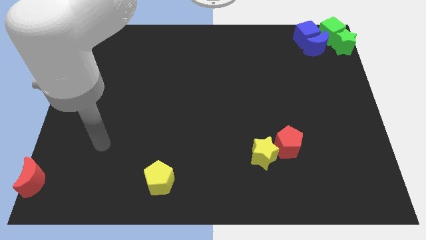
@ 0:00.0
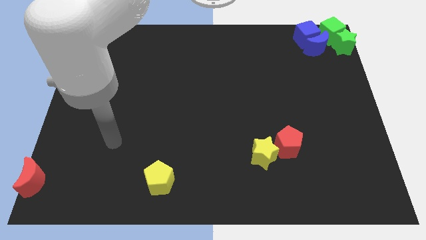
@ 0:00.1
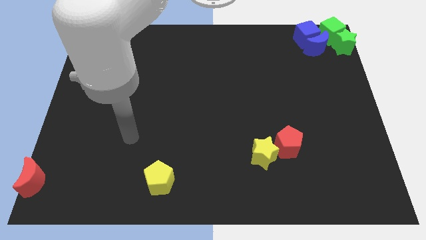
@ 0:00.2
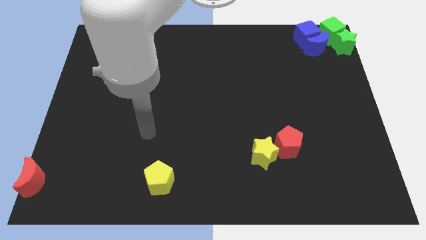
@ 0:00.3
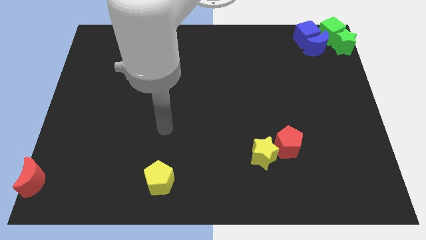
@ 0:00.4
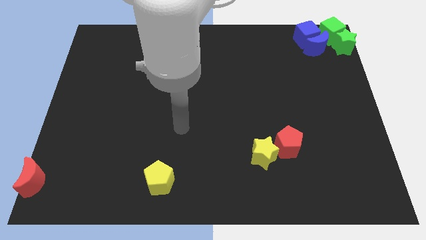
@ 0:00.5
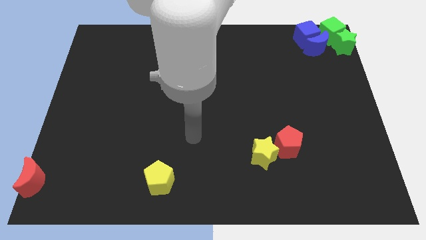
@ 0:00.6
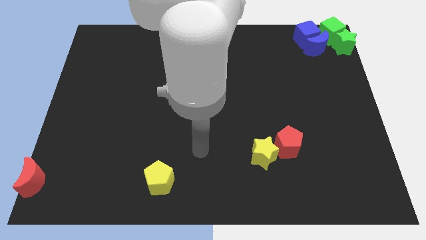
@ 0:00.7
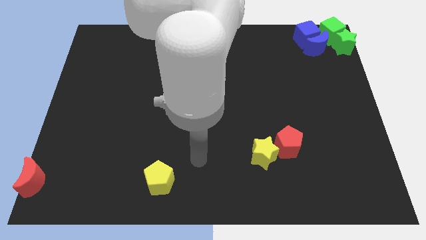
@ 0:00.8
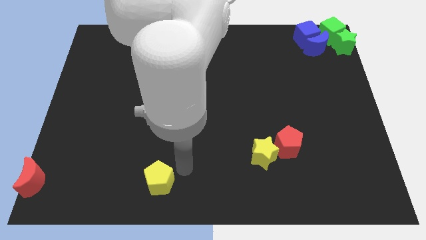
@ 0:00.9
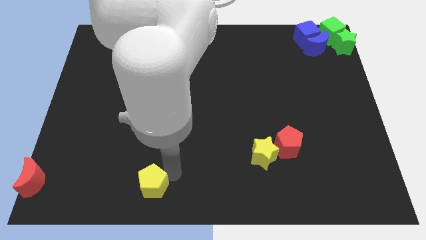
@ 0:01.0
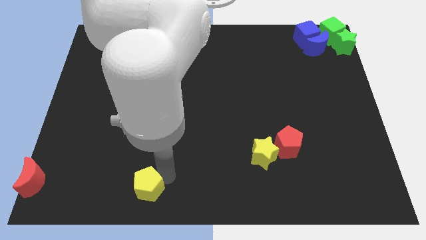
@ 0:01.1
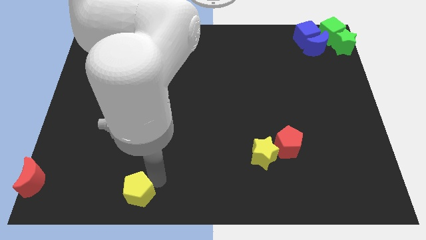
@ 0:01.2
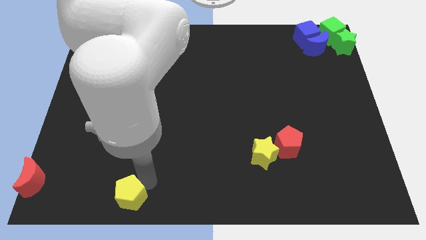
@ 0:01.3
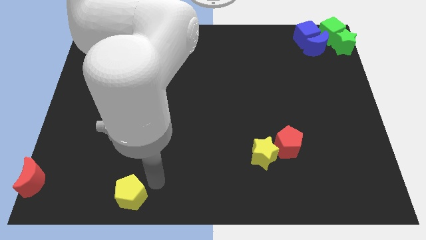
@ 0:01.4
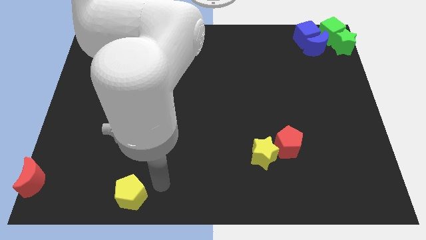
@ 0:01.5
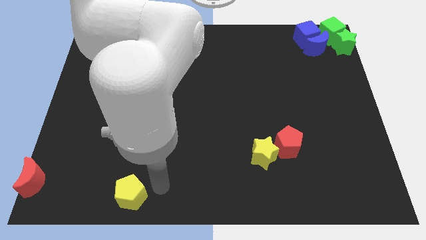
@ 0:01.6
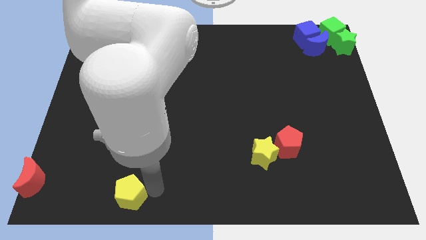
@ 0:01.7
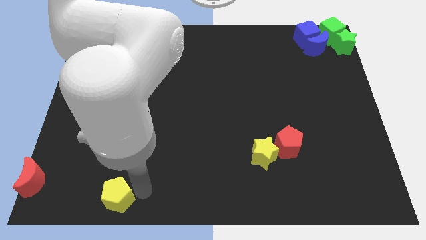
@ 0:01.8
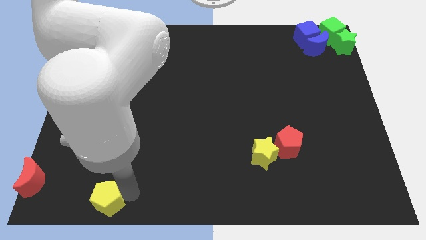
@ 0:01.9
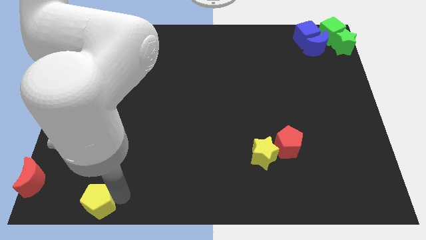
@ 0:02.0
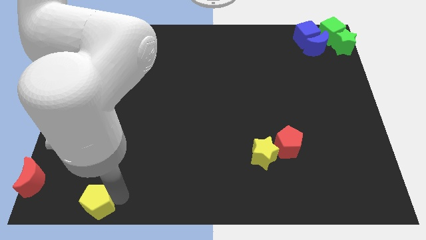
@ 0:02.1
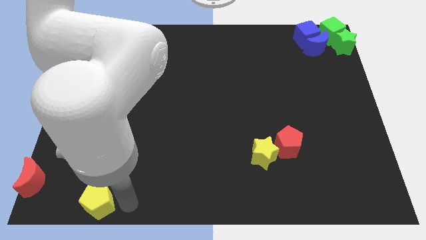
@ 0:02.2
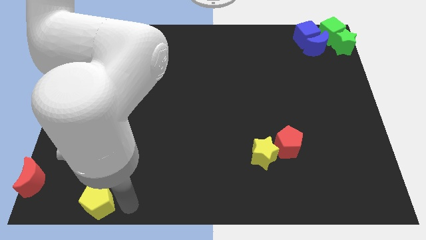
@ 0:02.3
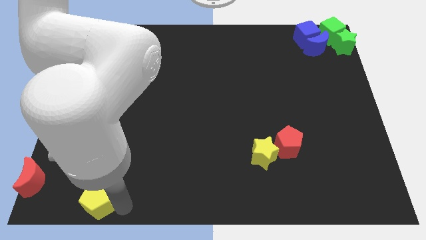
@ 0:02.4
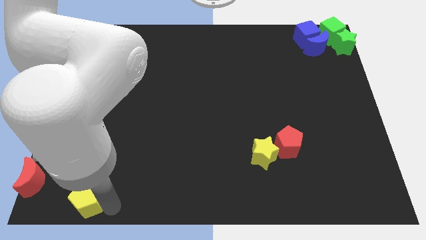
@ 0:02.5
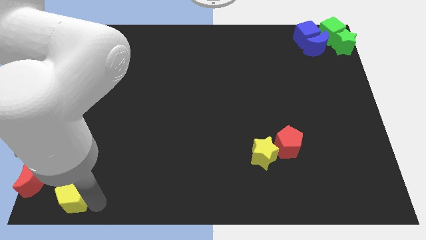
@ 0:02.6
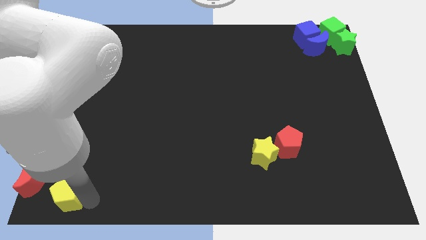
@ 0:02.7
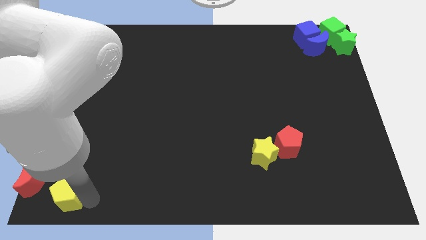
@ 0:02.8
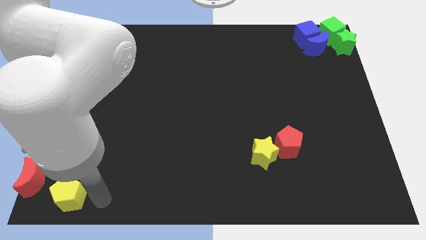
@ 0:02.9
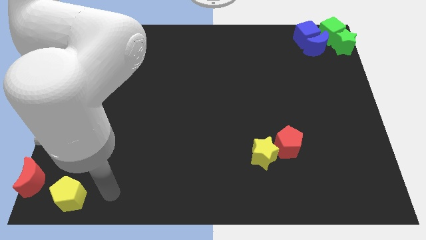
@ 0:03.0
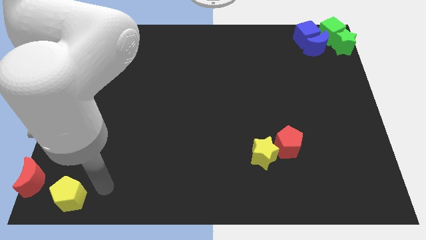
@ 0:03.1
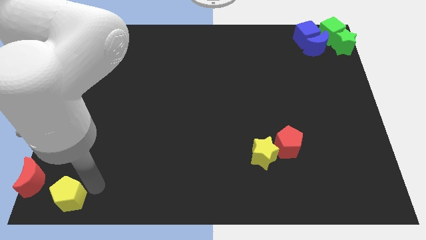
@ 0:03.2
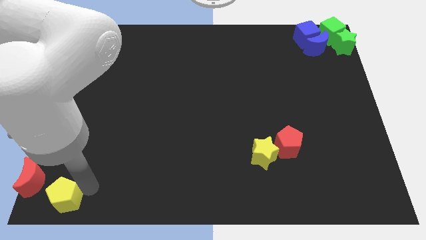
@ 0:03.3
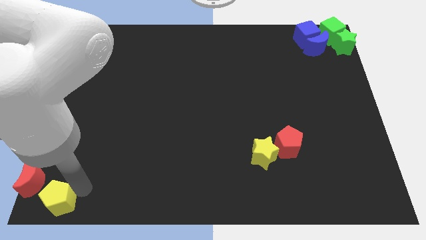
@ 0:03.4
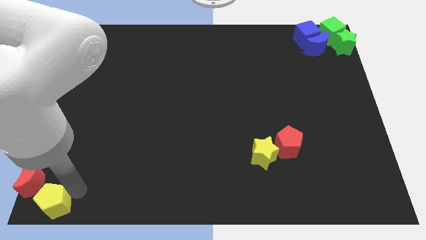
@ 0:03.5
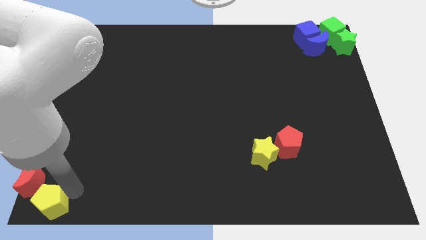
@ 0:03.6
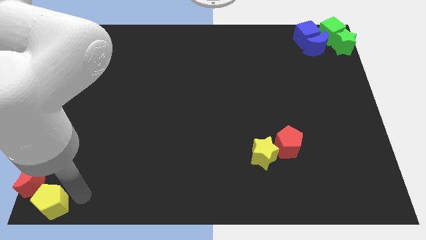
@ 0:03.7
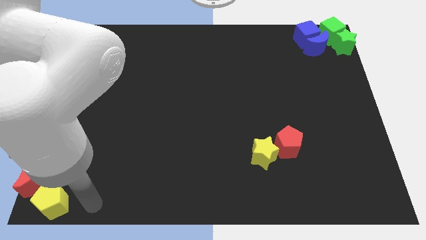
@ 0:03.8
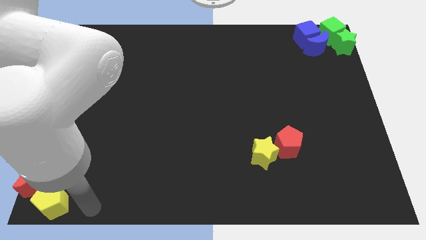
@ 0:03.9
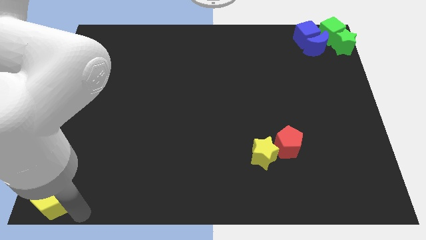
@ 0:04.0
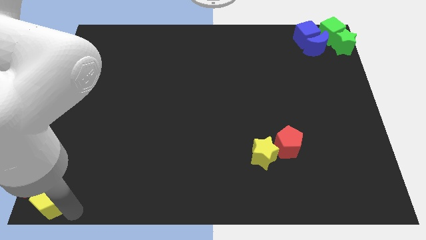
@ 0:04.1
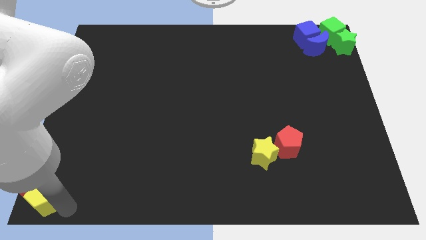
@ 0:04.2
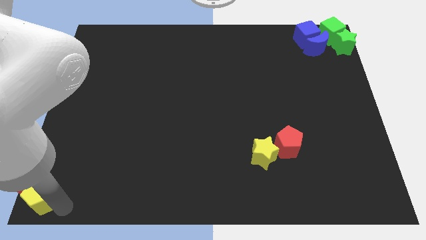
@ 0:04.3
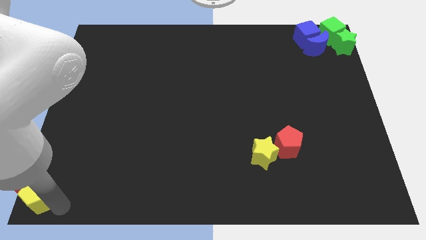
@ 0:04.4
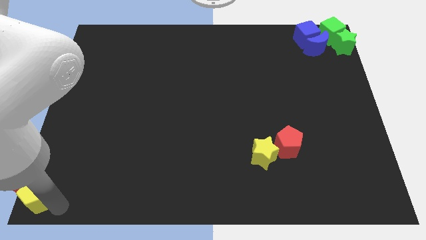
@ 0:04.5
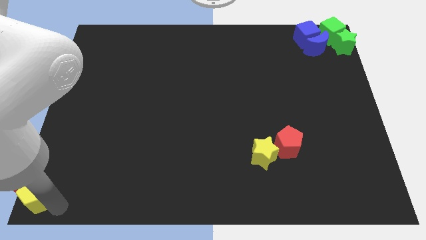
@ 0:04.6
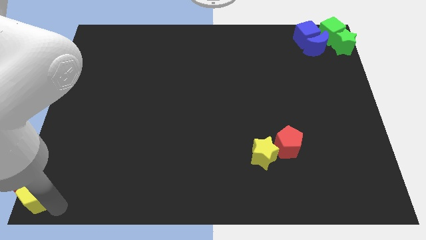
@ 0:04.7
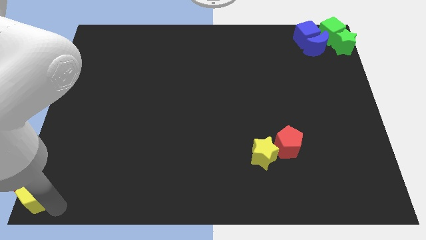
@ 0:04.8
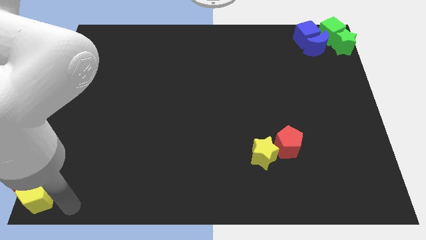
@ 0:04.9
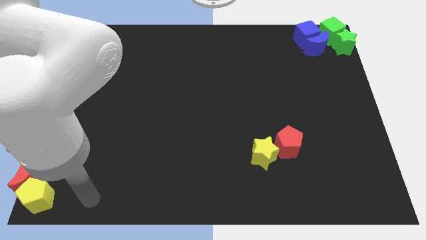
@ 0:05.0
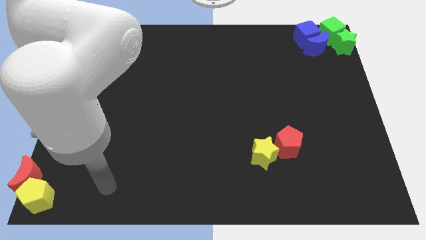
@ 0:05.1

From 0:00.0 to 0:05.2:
move the yellow pentagon towards the red crescent

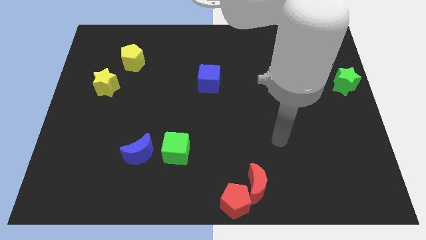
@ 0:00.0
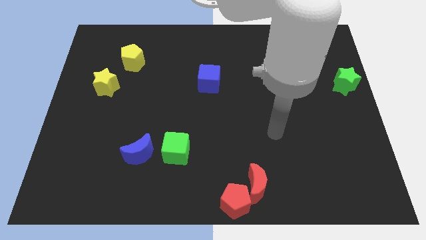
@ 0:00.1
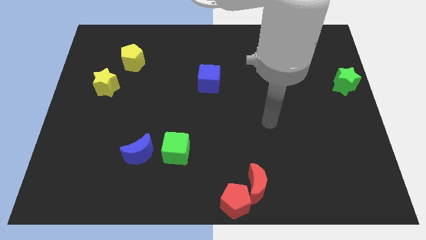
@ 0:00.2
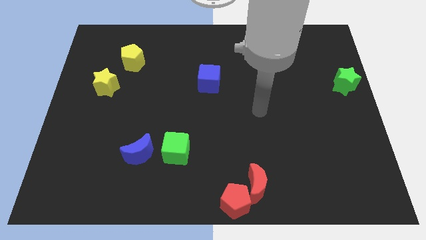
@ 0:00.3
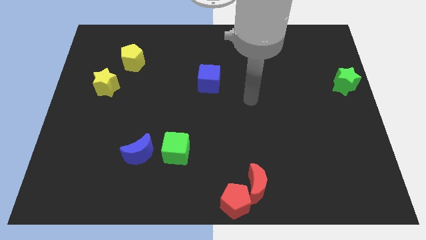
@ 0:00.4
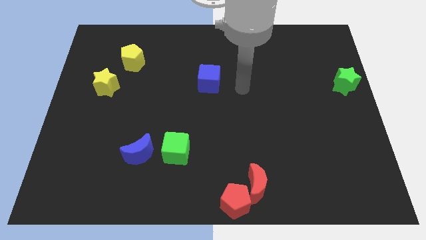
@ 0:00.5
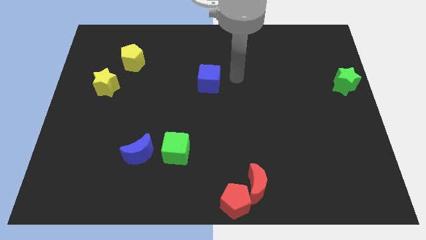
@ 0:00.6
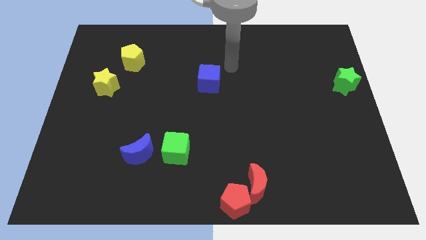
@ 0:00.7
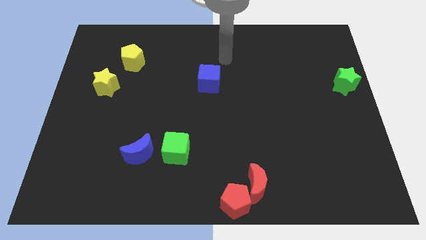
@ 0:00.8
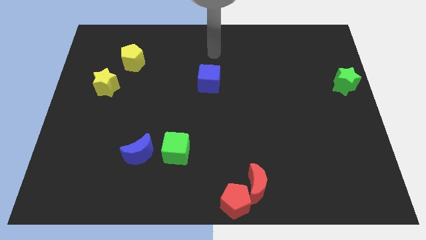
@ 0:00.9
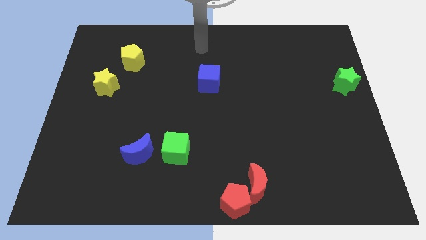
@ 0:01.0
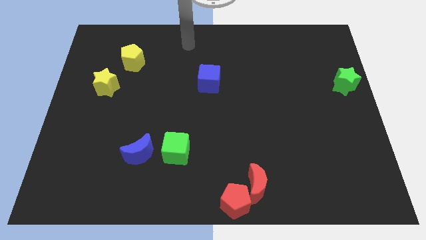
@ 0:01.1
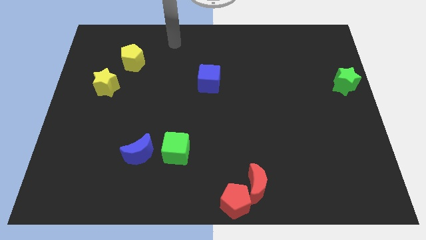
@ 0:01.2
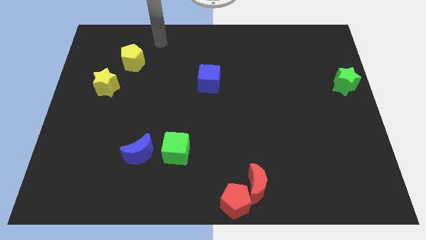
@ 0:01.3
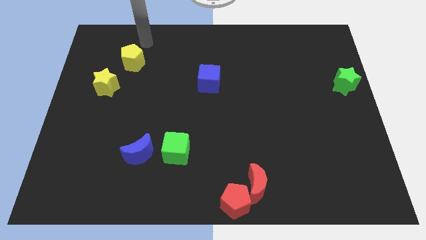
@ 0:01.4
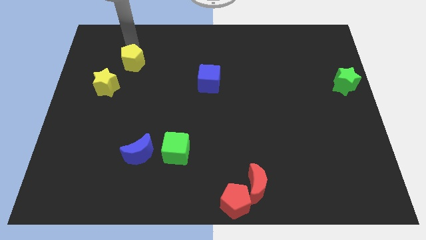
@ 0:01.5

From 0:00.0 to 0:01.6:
point the arm at the top side of the yellow pentagon

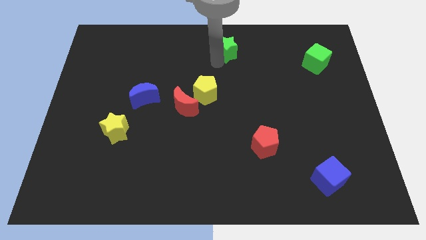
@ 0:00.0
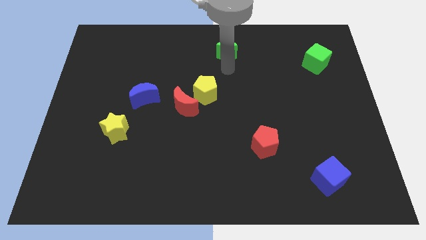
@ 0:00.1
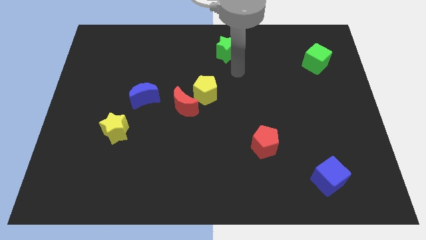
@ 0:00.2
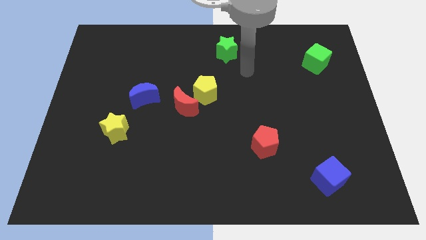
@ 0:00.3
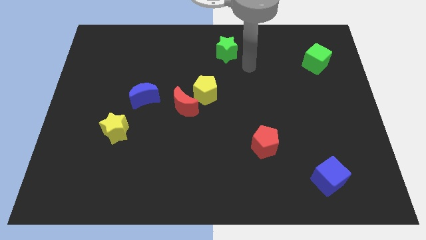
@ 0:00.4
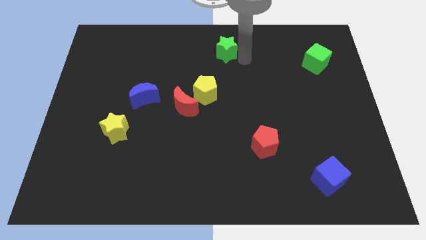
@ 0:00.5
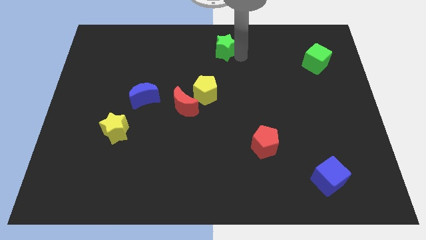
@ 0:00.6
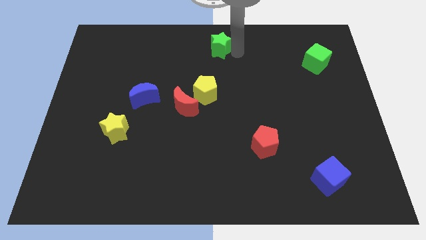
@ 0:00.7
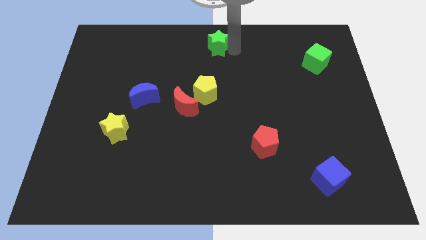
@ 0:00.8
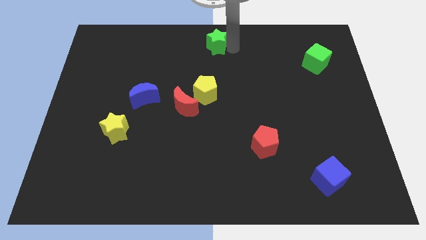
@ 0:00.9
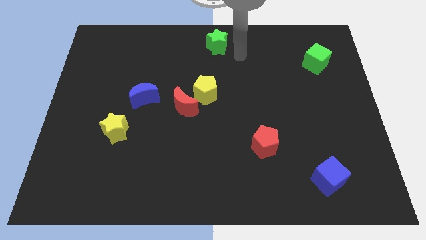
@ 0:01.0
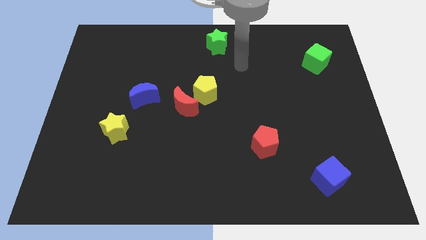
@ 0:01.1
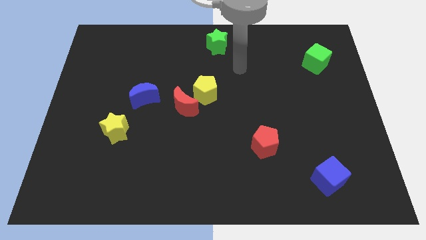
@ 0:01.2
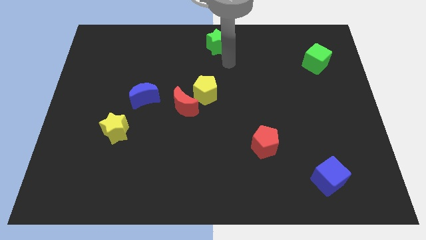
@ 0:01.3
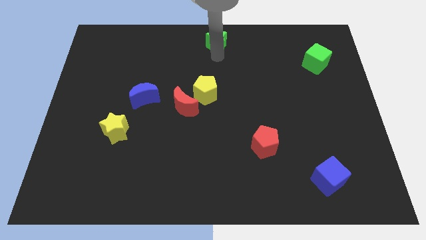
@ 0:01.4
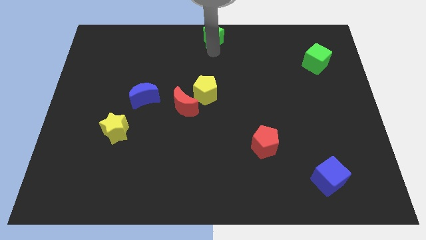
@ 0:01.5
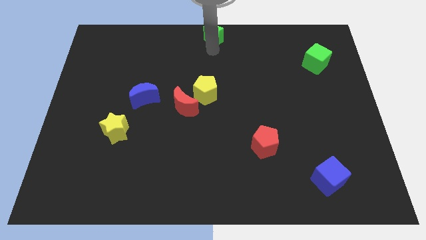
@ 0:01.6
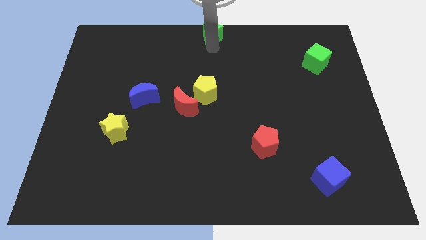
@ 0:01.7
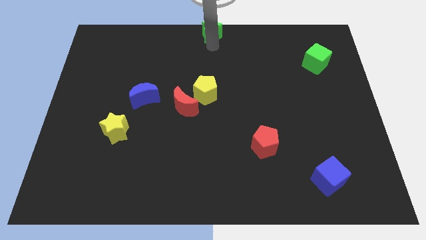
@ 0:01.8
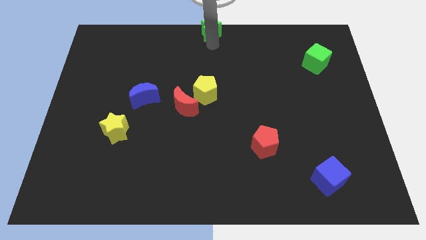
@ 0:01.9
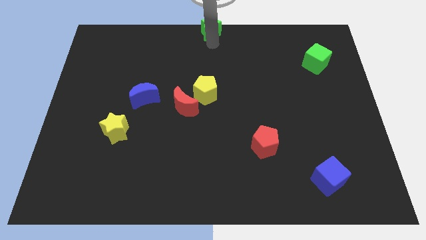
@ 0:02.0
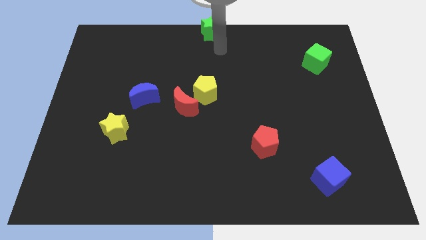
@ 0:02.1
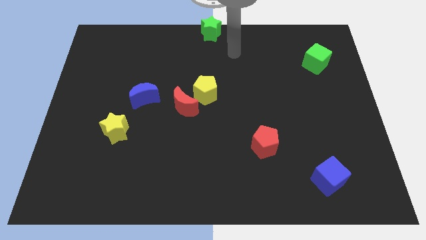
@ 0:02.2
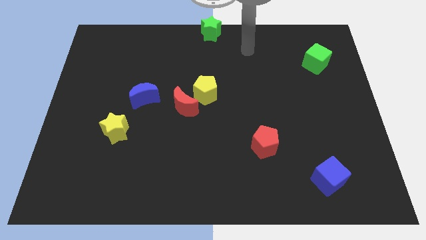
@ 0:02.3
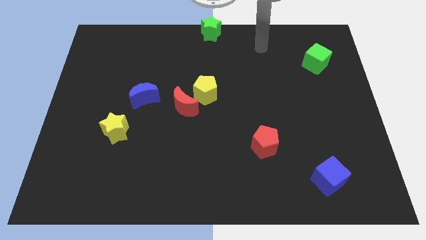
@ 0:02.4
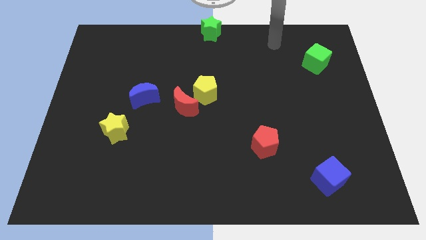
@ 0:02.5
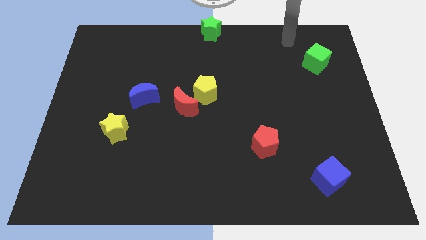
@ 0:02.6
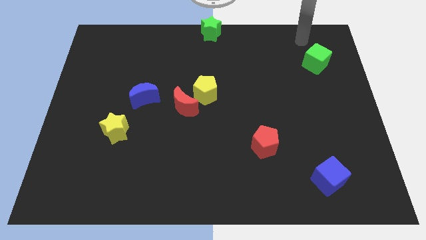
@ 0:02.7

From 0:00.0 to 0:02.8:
move the green star to the top side center
